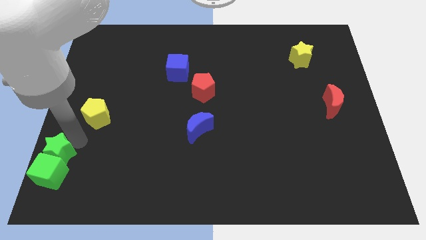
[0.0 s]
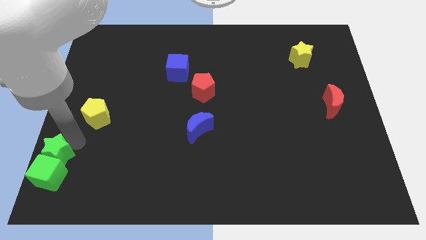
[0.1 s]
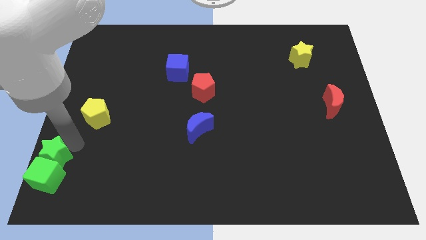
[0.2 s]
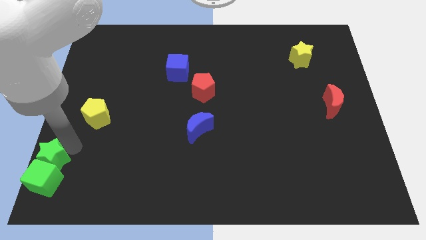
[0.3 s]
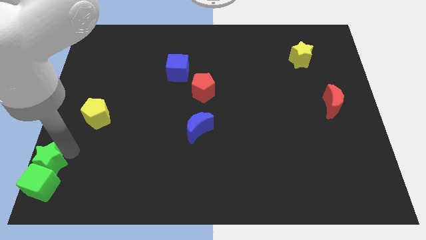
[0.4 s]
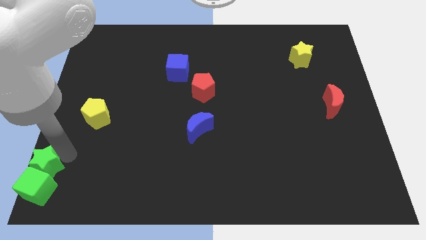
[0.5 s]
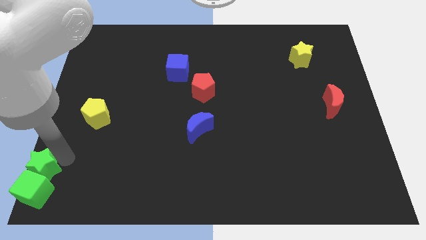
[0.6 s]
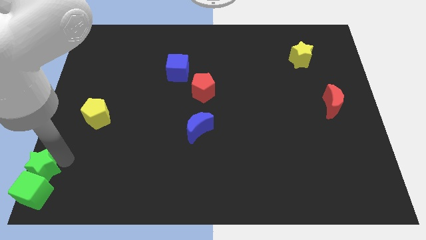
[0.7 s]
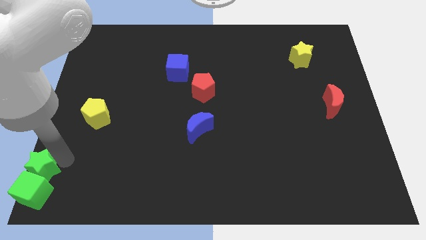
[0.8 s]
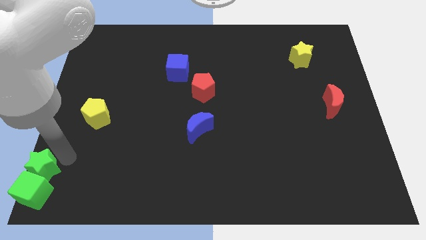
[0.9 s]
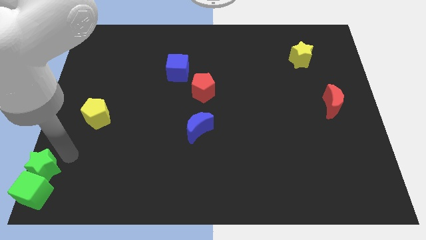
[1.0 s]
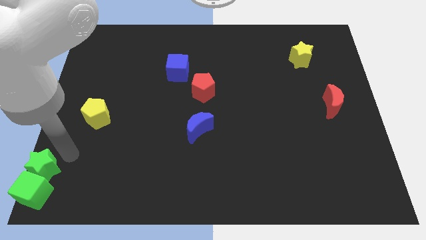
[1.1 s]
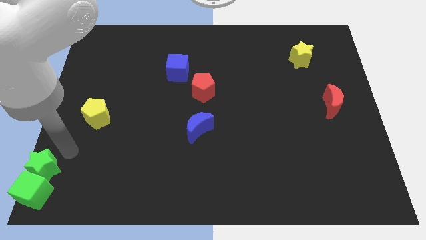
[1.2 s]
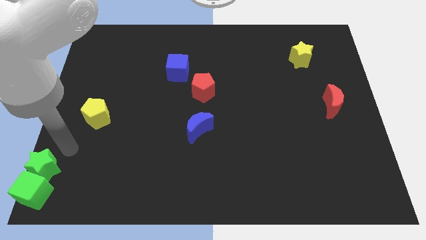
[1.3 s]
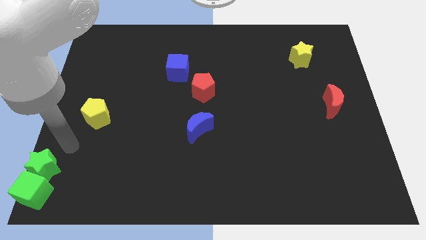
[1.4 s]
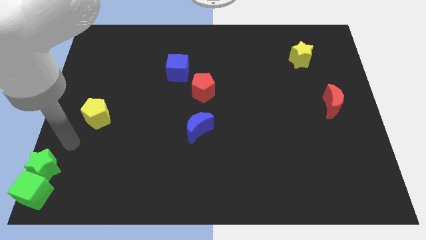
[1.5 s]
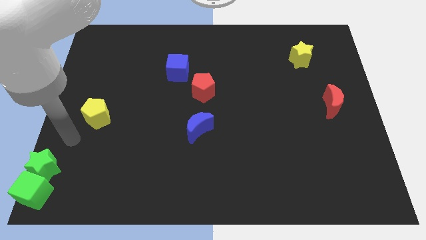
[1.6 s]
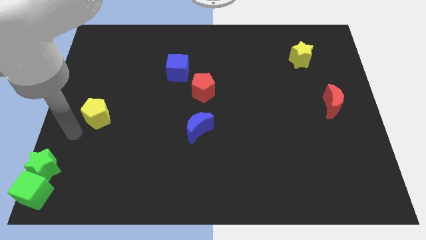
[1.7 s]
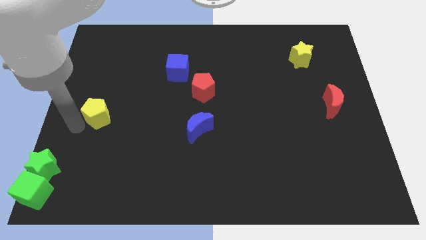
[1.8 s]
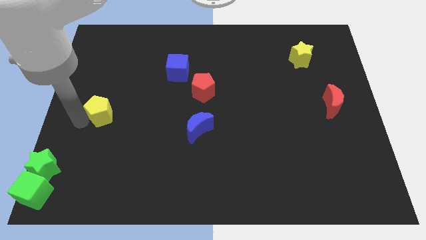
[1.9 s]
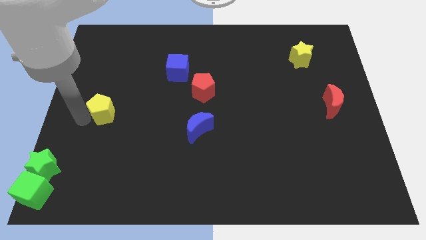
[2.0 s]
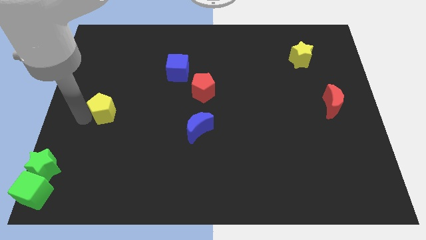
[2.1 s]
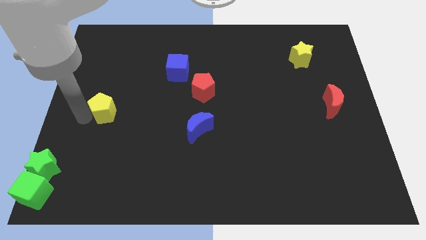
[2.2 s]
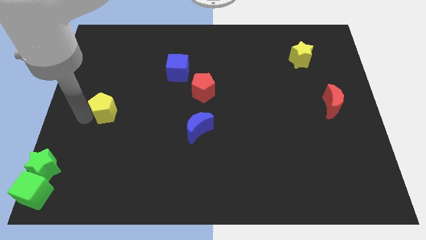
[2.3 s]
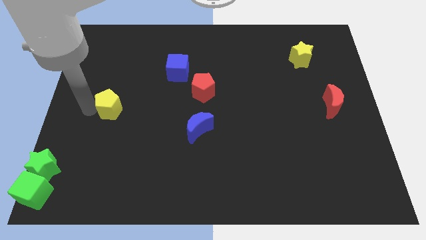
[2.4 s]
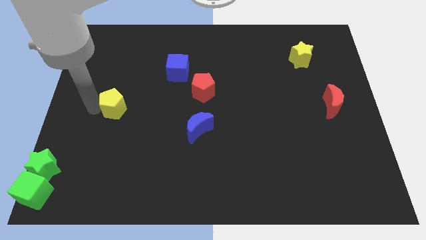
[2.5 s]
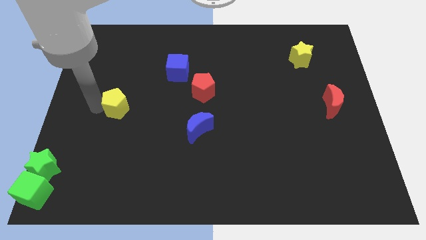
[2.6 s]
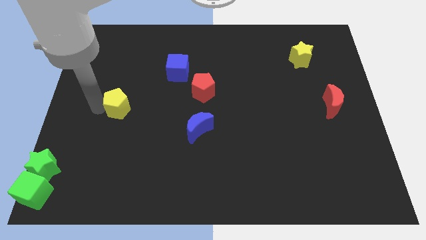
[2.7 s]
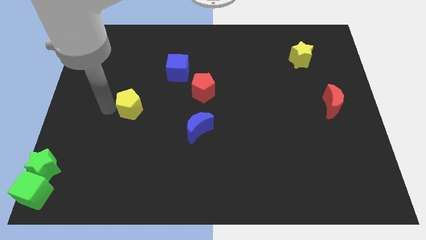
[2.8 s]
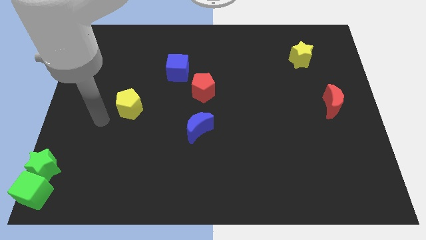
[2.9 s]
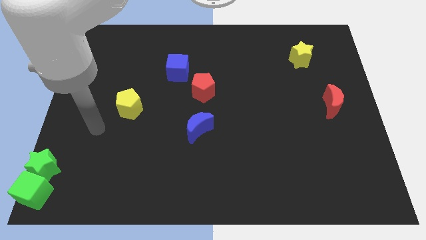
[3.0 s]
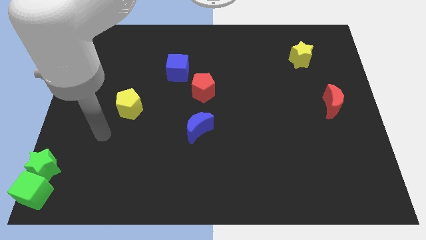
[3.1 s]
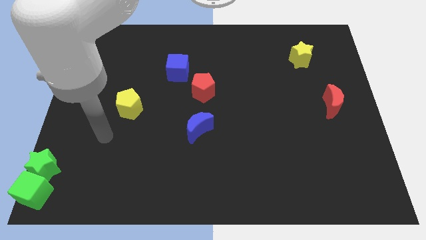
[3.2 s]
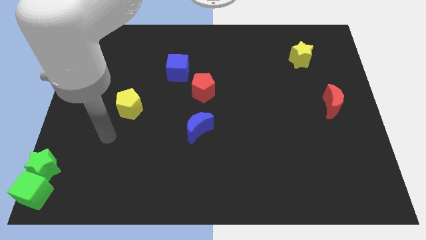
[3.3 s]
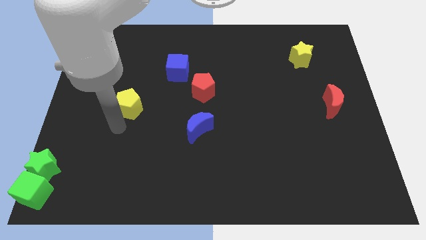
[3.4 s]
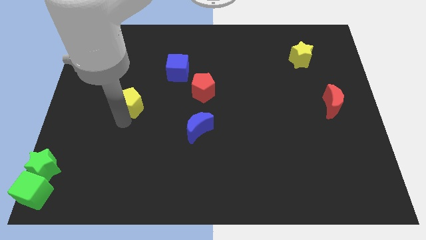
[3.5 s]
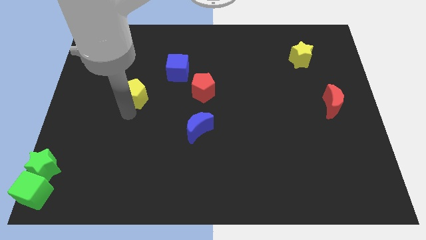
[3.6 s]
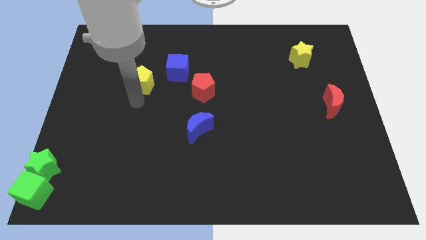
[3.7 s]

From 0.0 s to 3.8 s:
move the yellow pentagon towards the blue cube

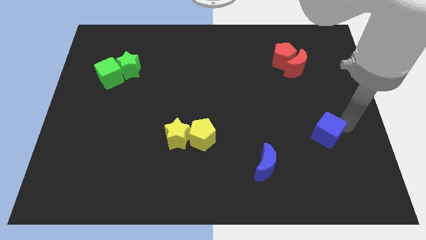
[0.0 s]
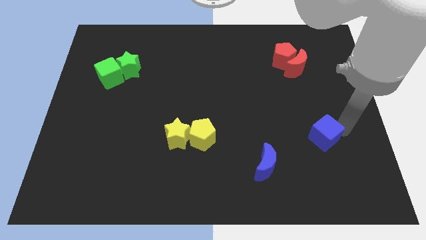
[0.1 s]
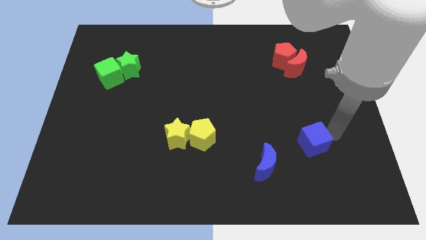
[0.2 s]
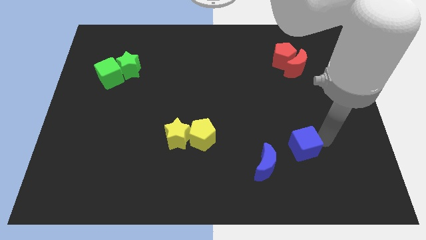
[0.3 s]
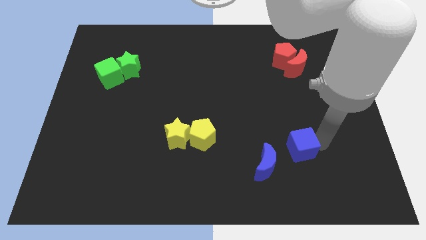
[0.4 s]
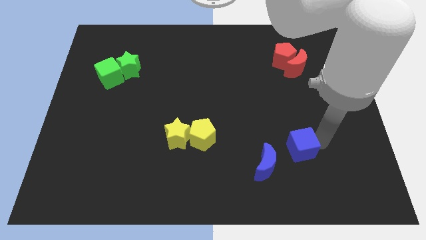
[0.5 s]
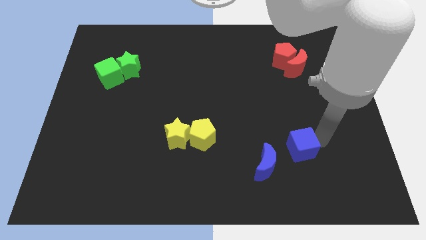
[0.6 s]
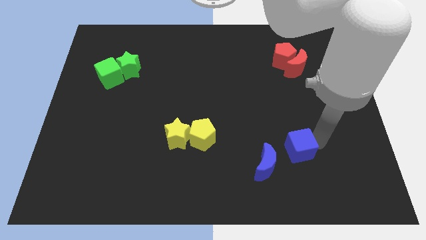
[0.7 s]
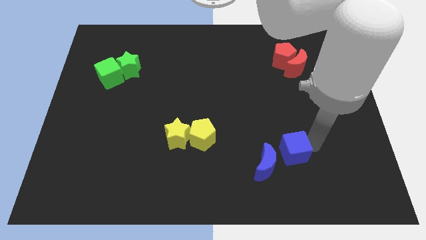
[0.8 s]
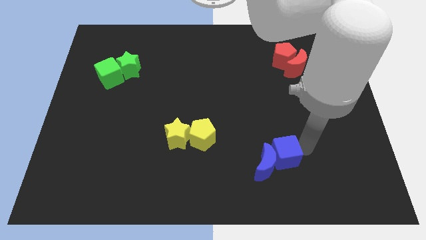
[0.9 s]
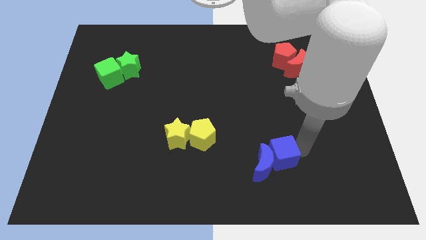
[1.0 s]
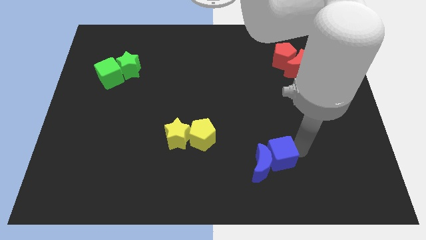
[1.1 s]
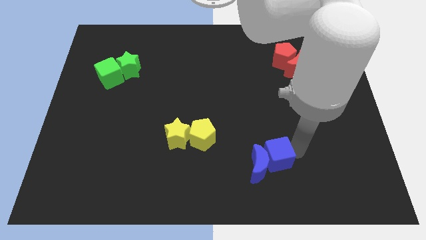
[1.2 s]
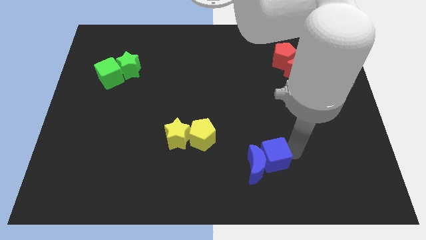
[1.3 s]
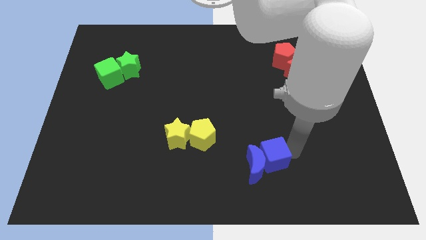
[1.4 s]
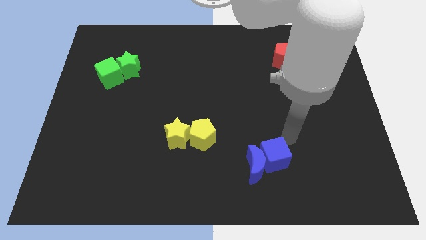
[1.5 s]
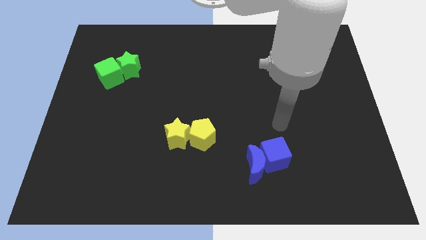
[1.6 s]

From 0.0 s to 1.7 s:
push the blue cube into the blue crescent

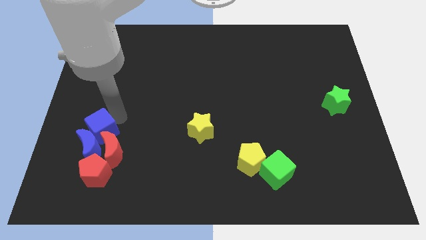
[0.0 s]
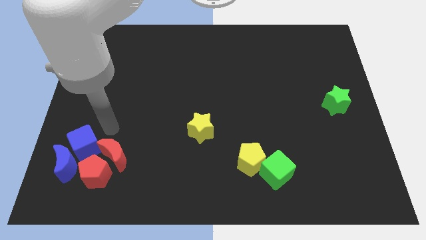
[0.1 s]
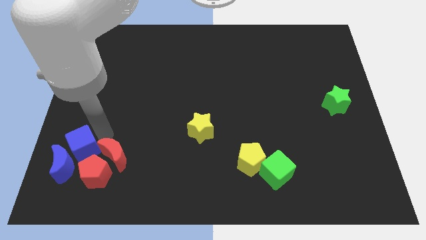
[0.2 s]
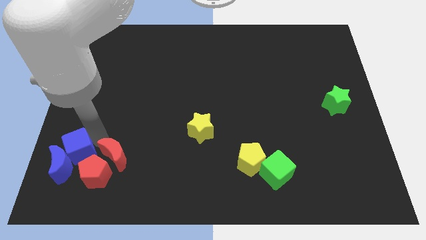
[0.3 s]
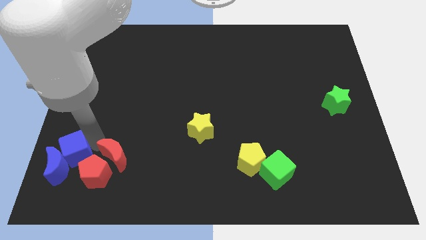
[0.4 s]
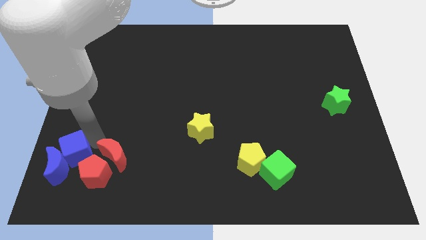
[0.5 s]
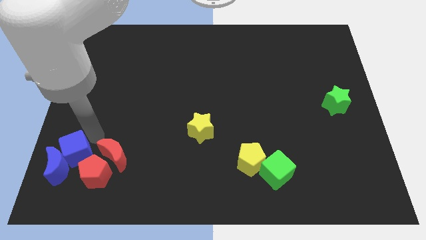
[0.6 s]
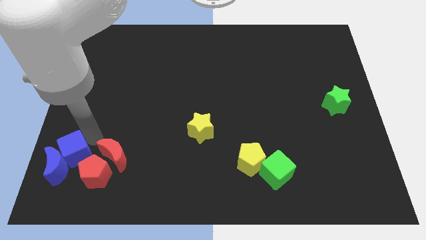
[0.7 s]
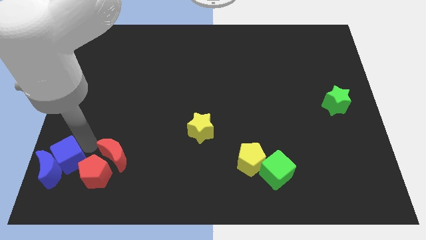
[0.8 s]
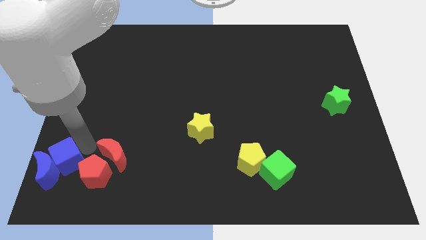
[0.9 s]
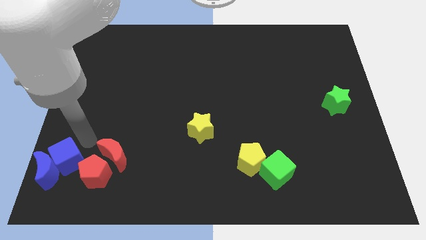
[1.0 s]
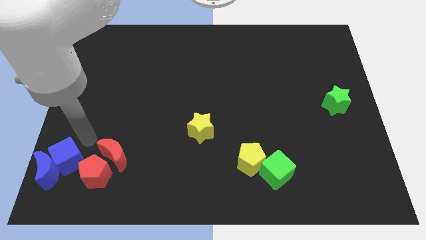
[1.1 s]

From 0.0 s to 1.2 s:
push the blue cube and blue crescent slightly to the bottom side of the board

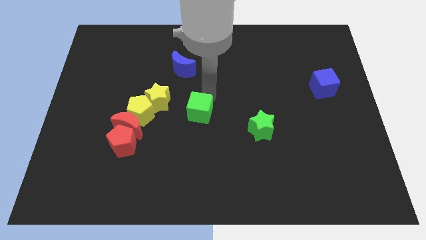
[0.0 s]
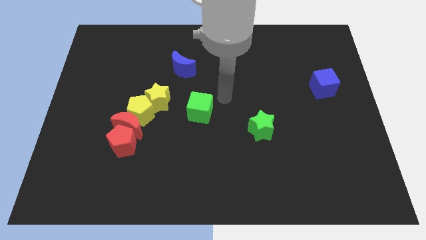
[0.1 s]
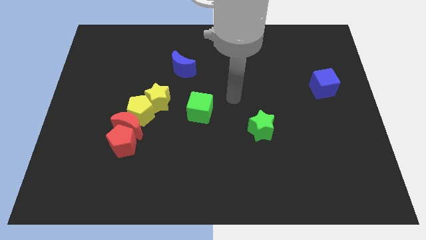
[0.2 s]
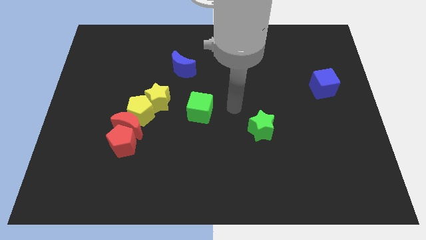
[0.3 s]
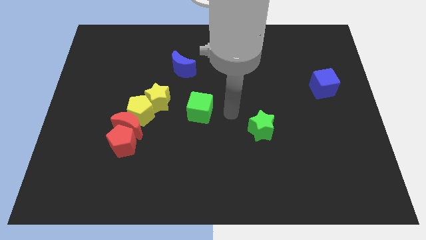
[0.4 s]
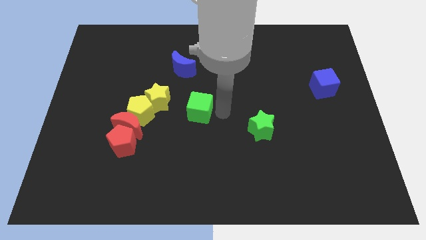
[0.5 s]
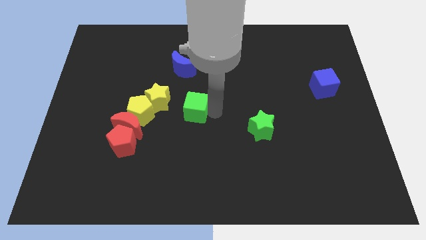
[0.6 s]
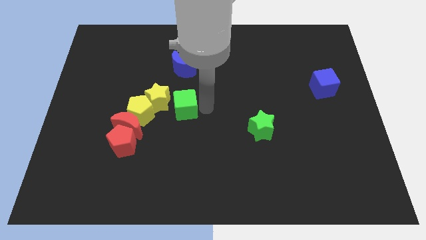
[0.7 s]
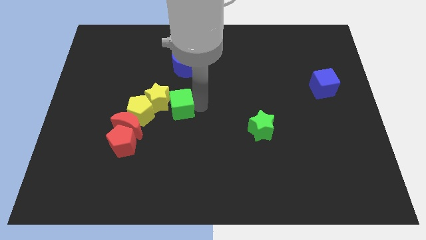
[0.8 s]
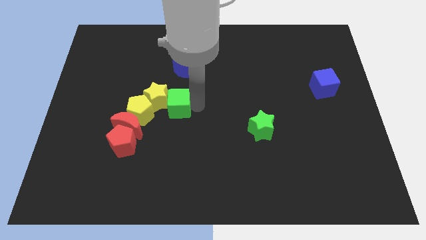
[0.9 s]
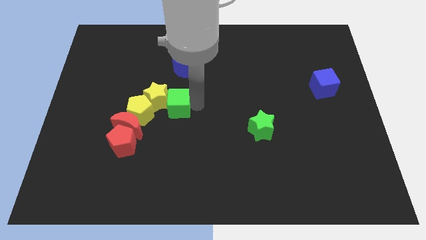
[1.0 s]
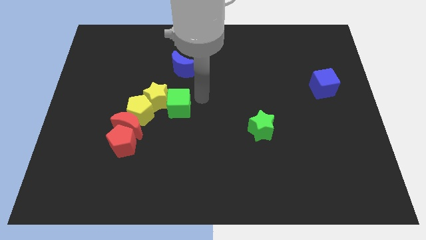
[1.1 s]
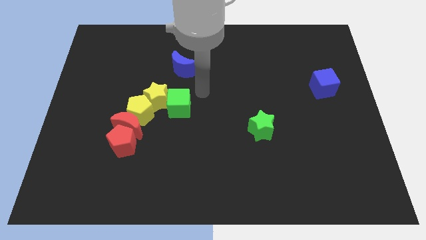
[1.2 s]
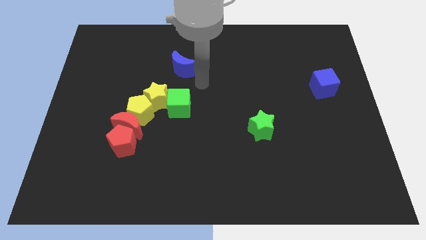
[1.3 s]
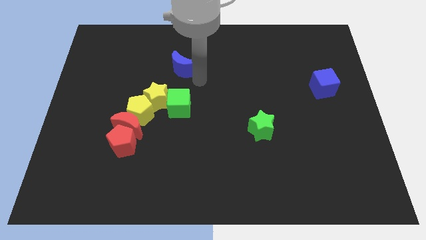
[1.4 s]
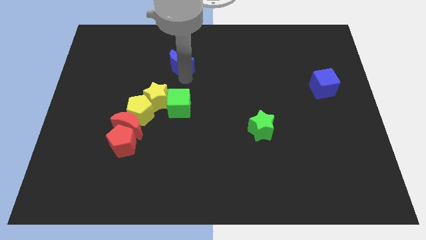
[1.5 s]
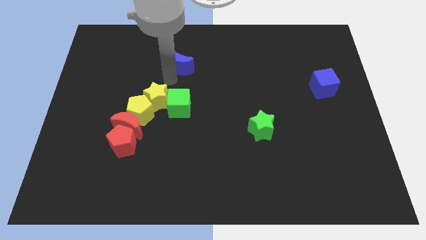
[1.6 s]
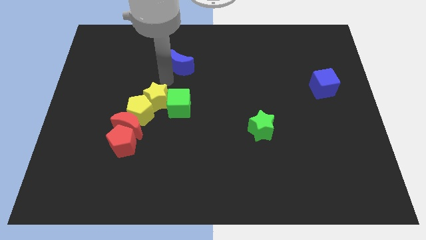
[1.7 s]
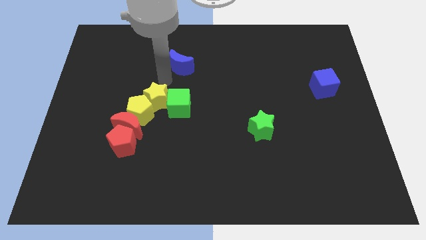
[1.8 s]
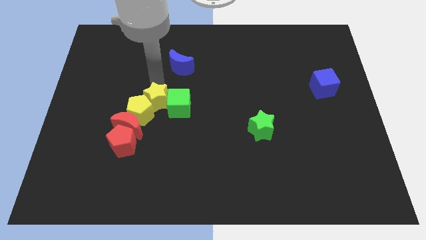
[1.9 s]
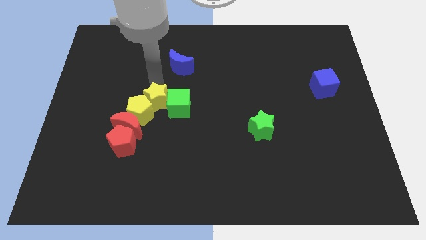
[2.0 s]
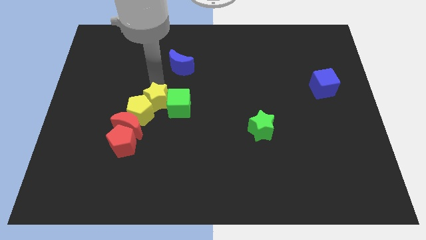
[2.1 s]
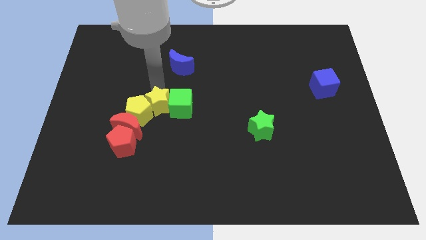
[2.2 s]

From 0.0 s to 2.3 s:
push the yellow star with the green cube

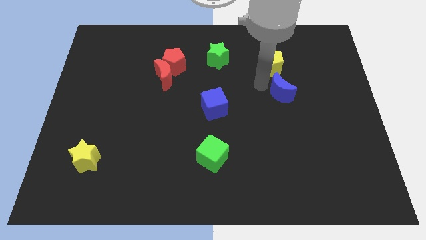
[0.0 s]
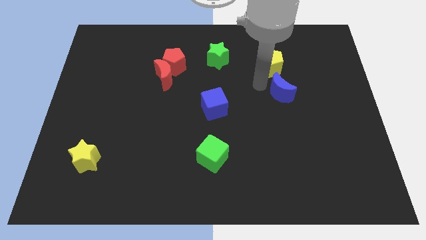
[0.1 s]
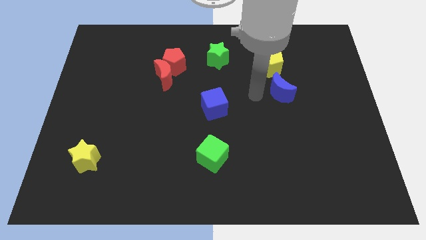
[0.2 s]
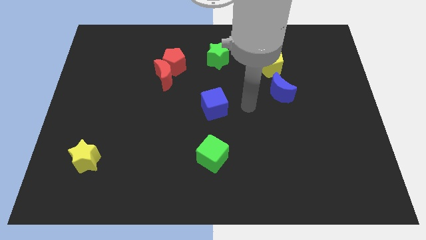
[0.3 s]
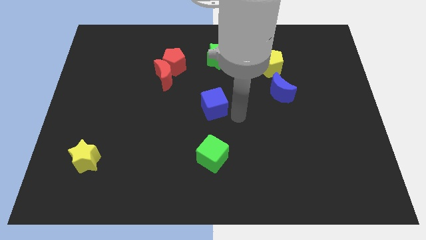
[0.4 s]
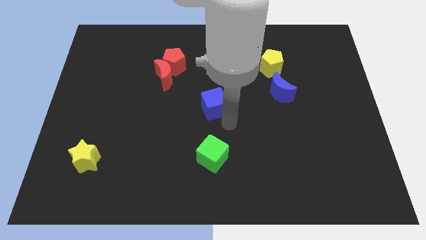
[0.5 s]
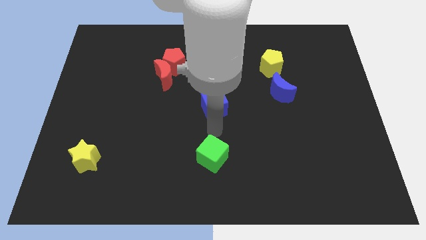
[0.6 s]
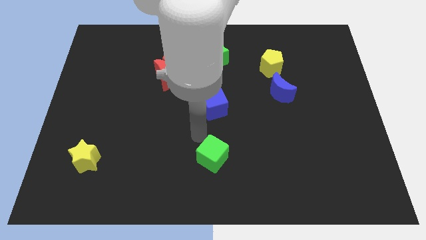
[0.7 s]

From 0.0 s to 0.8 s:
place your arm in between the green and blue cubes
